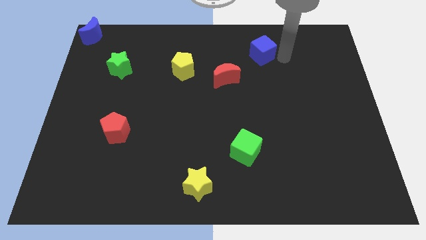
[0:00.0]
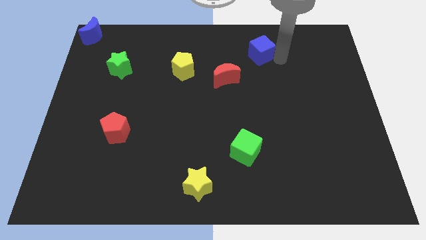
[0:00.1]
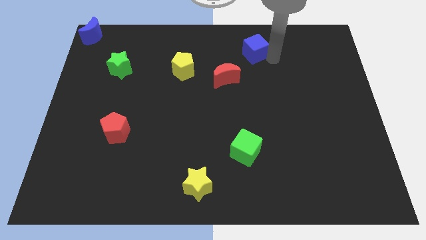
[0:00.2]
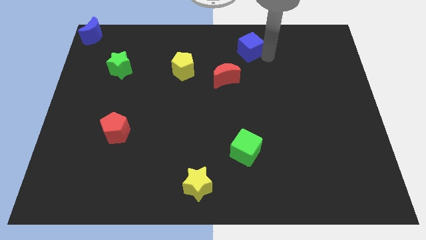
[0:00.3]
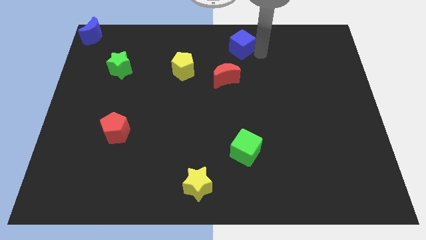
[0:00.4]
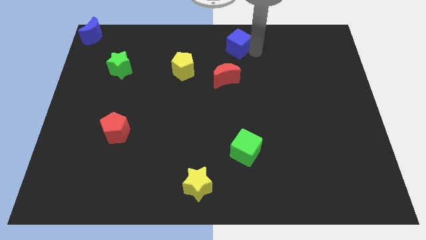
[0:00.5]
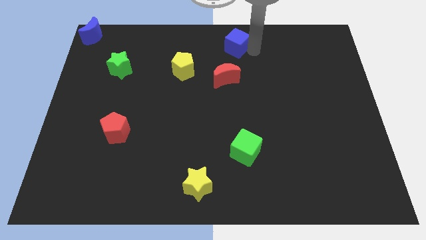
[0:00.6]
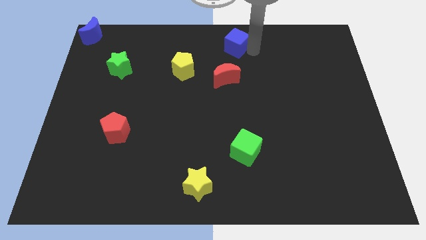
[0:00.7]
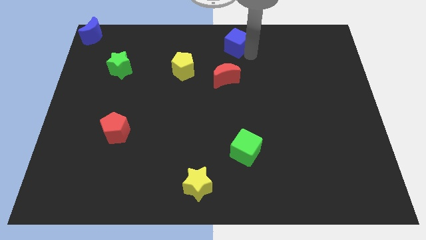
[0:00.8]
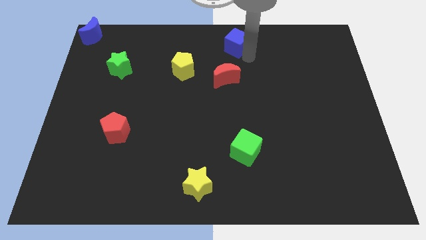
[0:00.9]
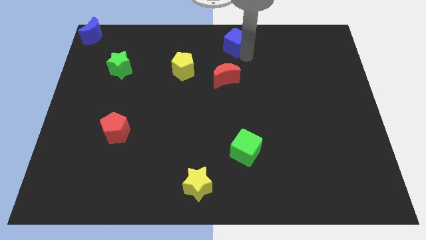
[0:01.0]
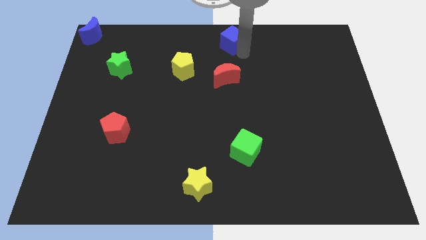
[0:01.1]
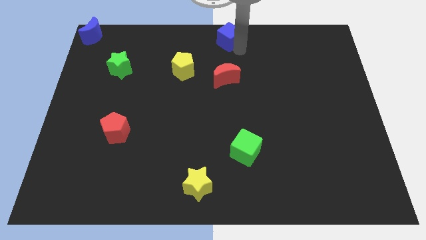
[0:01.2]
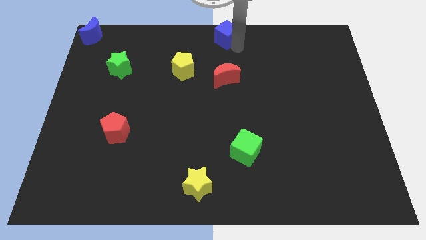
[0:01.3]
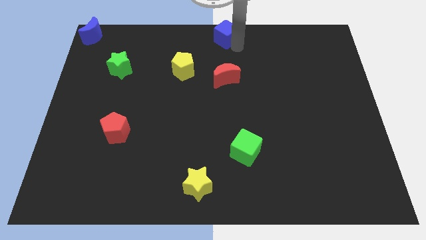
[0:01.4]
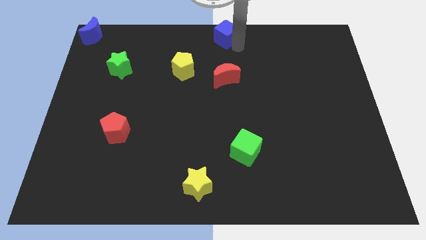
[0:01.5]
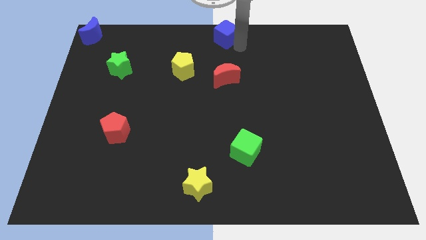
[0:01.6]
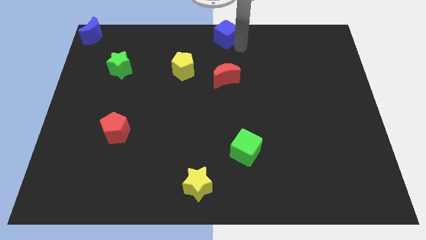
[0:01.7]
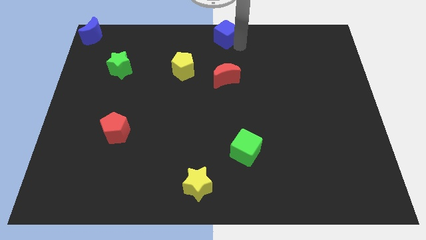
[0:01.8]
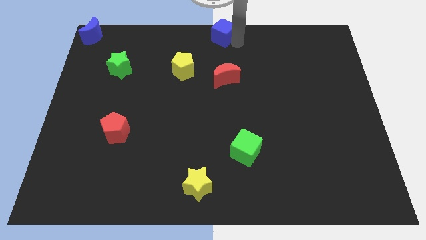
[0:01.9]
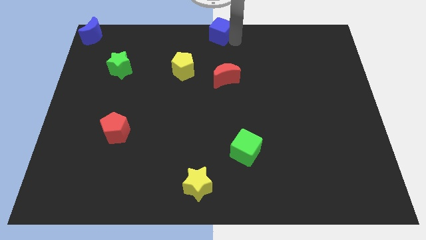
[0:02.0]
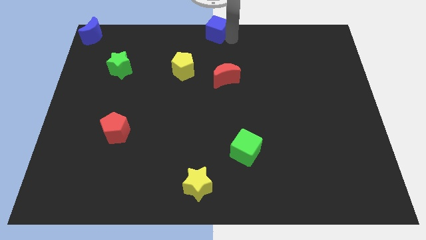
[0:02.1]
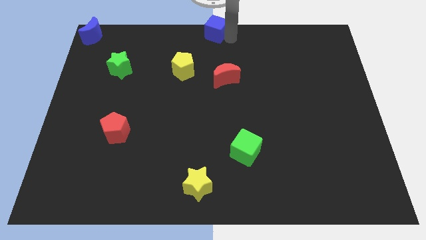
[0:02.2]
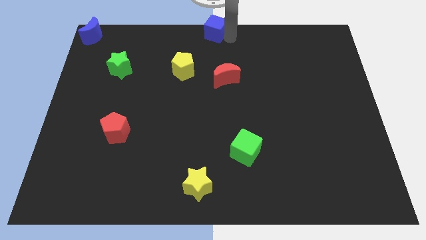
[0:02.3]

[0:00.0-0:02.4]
place the blue cube to the top center of the board

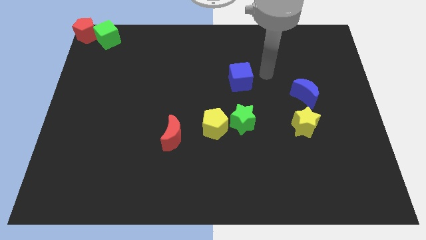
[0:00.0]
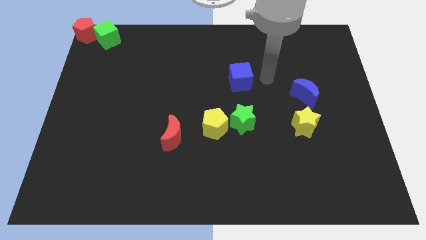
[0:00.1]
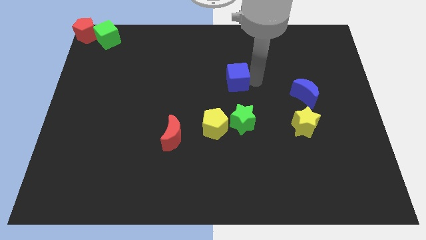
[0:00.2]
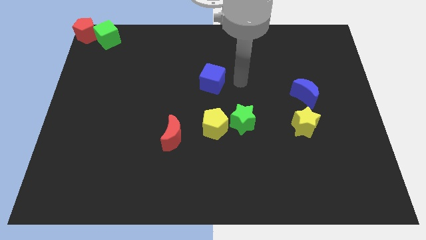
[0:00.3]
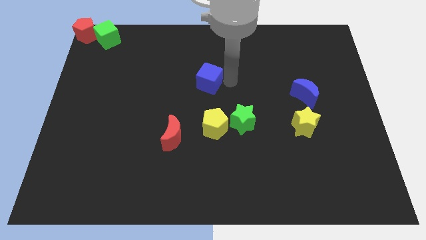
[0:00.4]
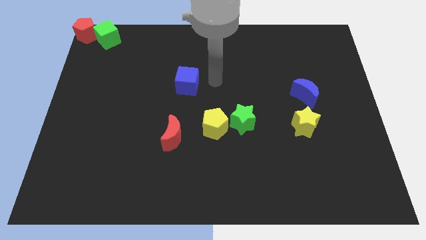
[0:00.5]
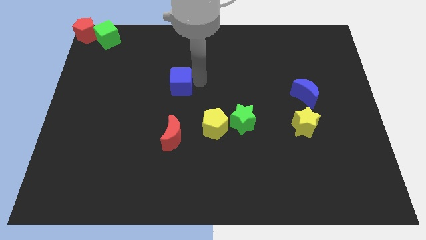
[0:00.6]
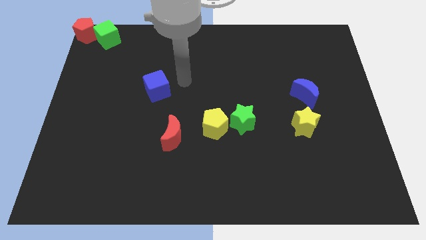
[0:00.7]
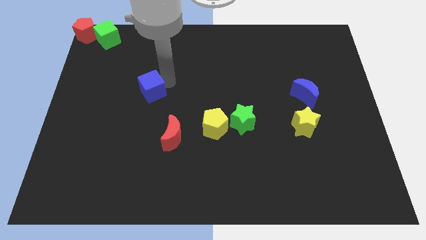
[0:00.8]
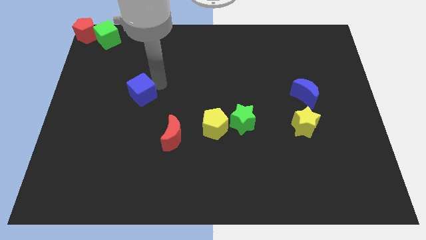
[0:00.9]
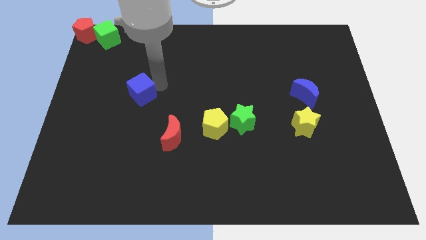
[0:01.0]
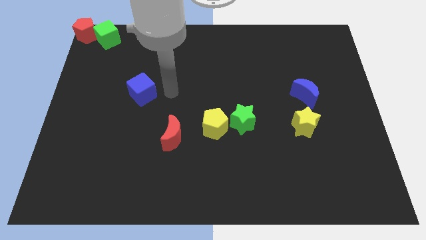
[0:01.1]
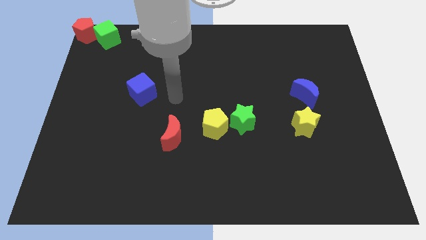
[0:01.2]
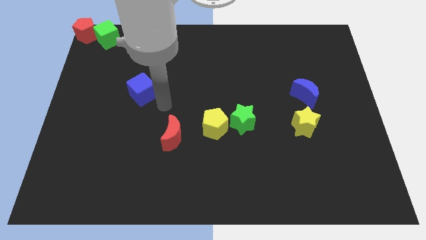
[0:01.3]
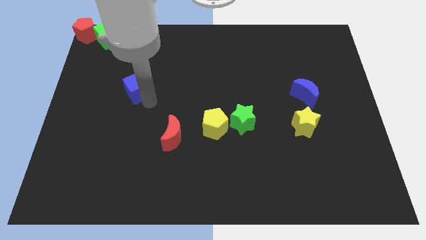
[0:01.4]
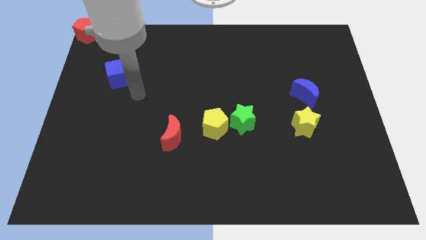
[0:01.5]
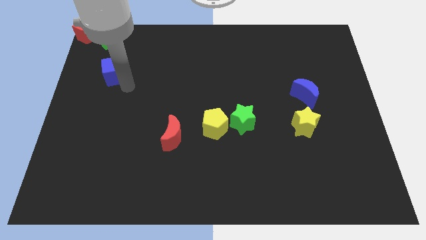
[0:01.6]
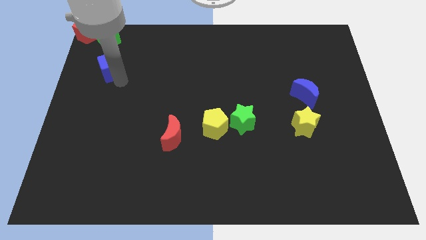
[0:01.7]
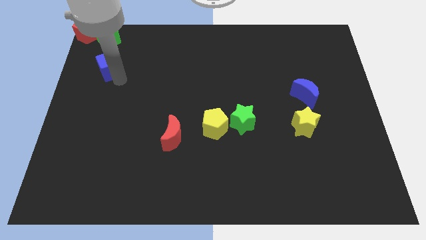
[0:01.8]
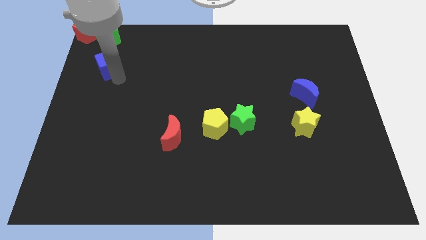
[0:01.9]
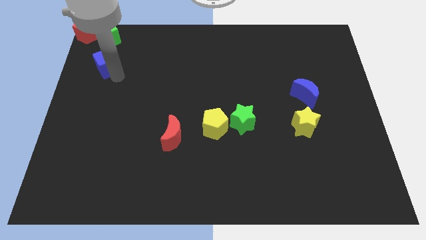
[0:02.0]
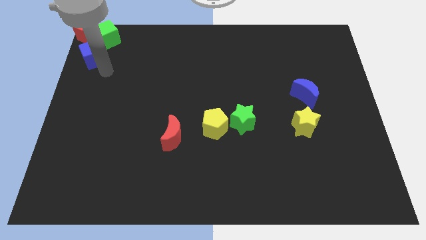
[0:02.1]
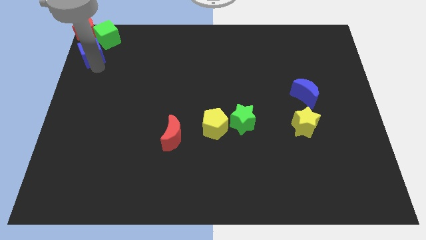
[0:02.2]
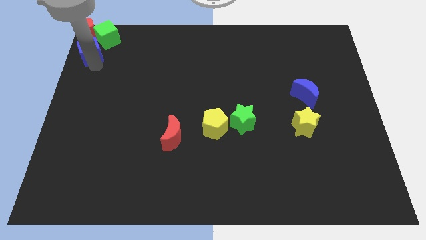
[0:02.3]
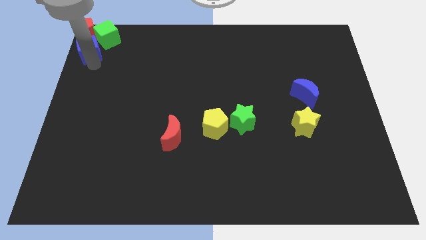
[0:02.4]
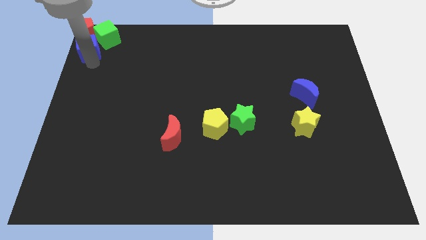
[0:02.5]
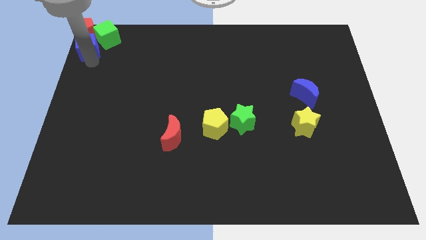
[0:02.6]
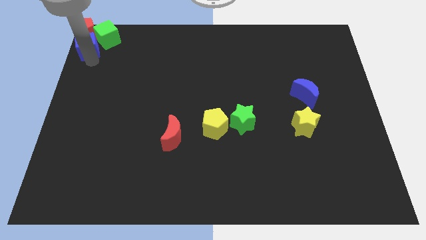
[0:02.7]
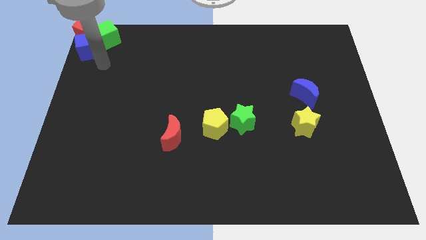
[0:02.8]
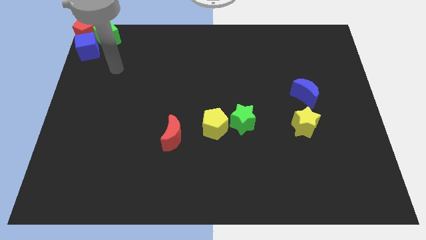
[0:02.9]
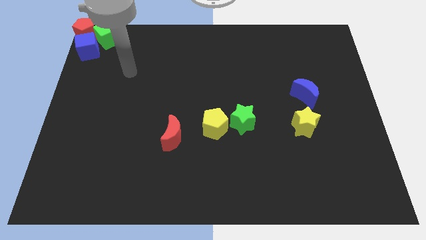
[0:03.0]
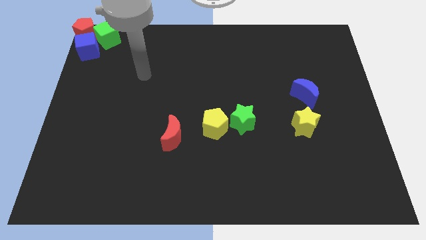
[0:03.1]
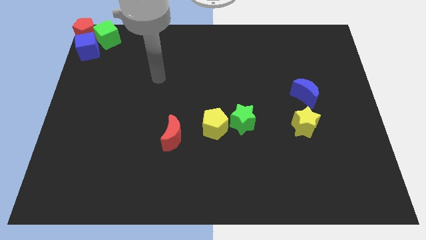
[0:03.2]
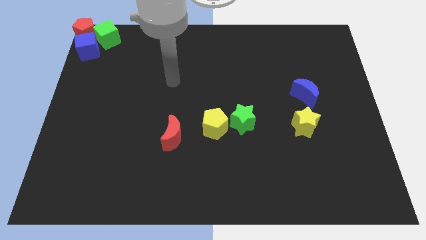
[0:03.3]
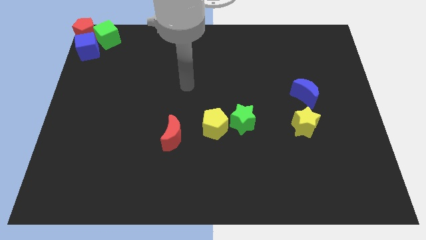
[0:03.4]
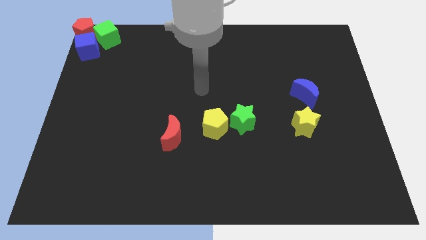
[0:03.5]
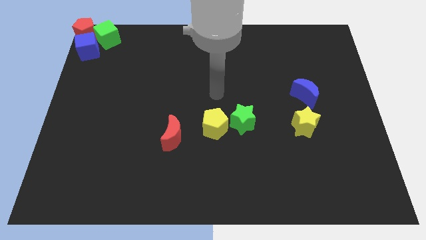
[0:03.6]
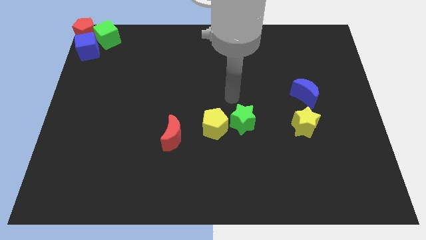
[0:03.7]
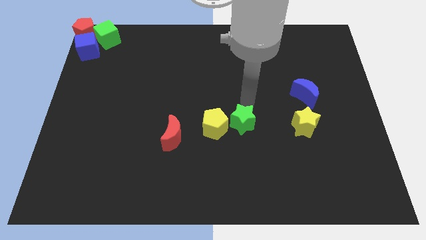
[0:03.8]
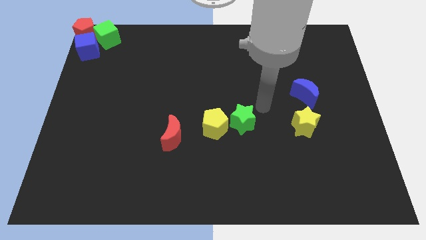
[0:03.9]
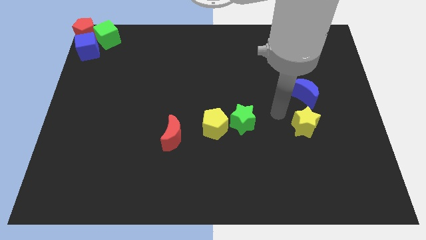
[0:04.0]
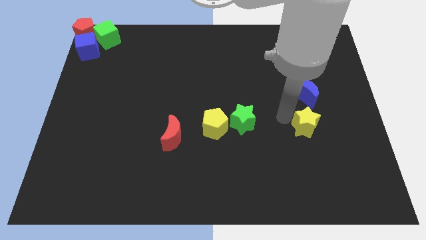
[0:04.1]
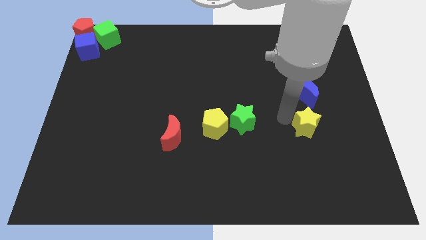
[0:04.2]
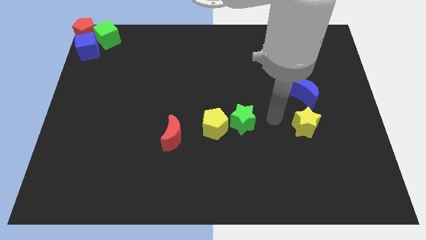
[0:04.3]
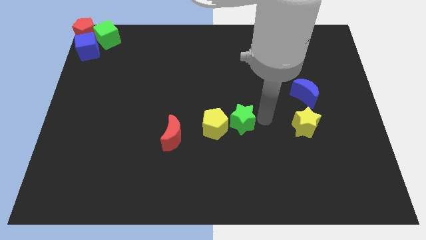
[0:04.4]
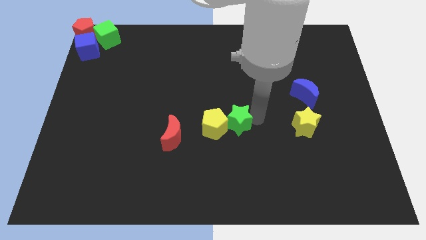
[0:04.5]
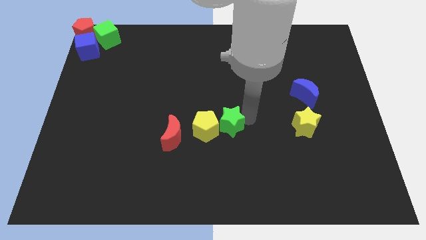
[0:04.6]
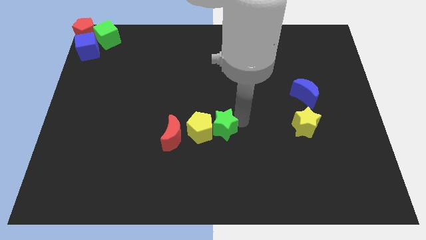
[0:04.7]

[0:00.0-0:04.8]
place the blue cube to the top left corner of the board

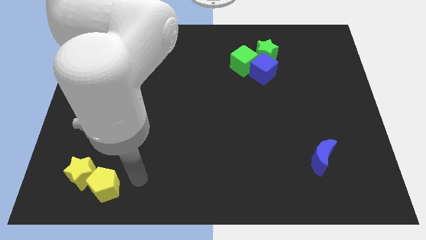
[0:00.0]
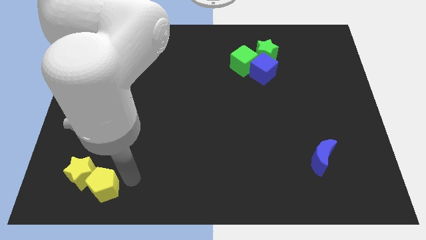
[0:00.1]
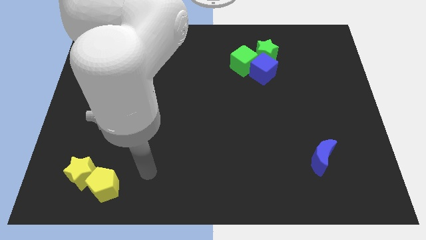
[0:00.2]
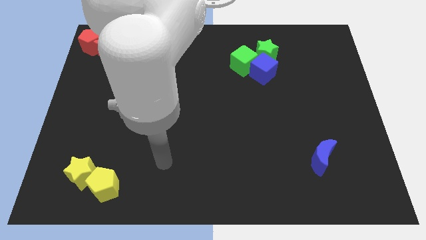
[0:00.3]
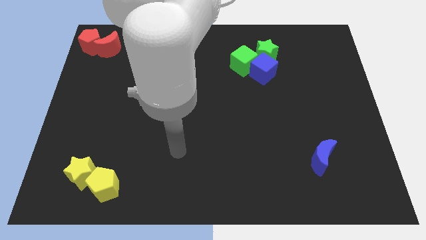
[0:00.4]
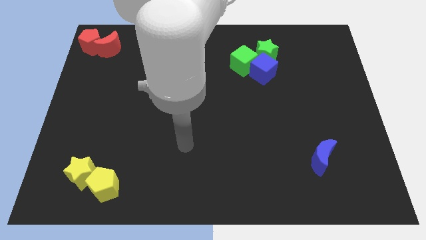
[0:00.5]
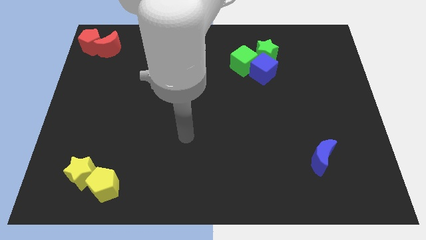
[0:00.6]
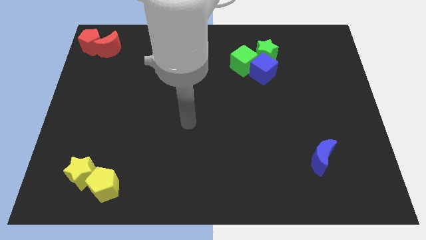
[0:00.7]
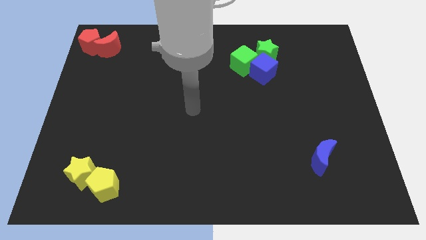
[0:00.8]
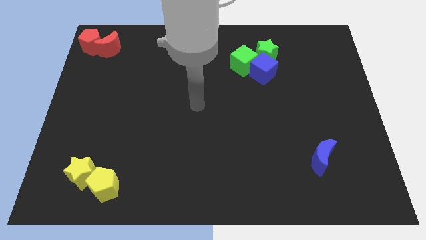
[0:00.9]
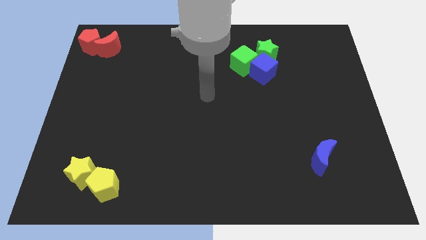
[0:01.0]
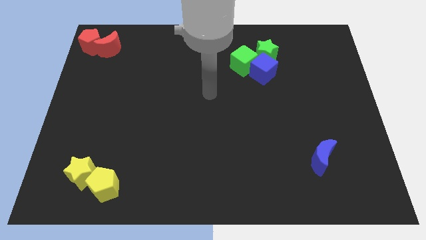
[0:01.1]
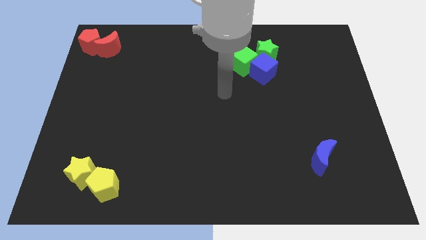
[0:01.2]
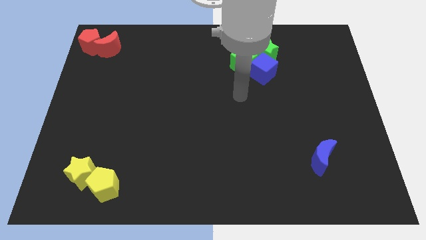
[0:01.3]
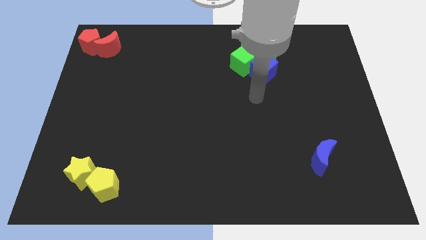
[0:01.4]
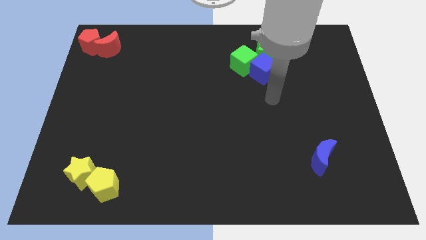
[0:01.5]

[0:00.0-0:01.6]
move your arm to the bottom of the blue cube

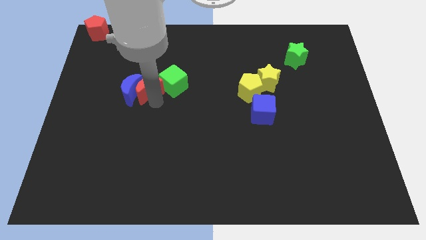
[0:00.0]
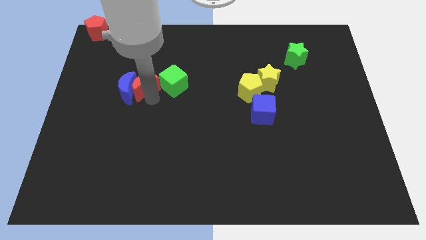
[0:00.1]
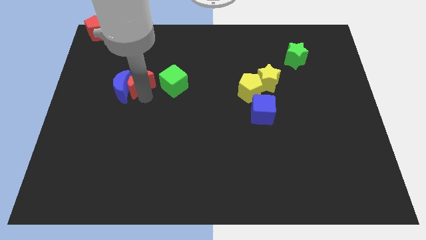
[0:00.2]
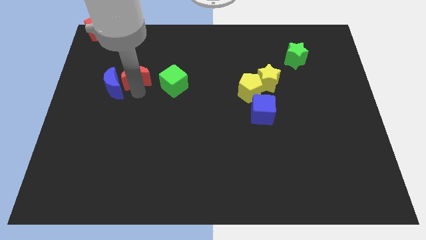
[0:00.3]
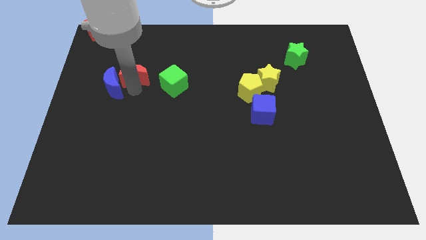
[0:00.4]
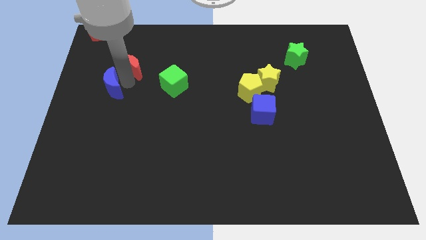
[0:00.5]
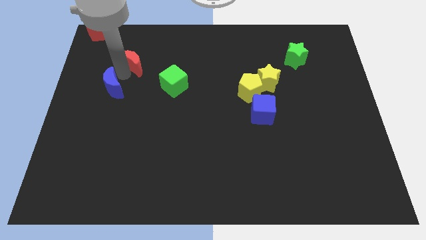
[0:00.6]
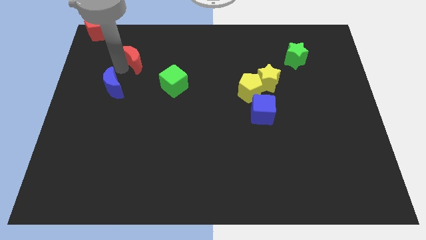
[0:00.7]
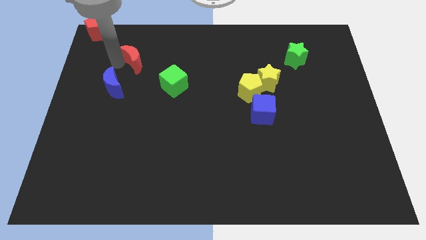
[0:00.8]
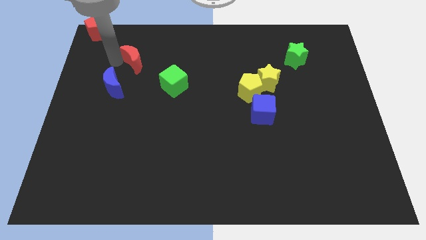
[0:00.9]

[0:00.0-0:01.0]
separate the crescents
